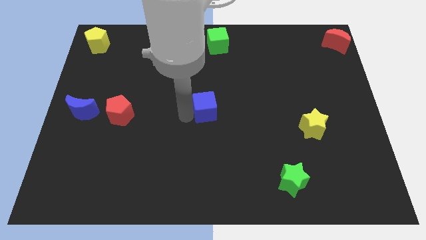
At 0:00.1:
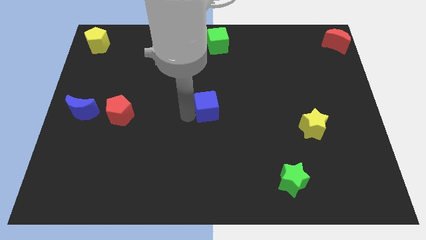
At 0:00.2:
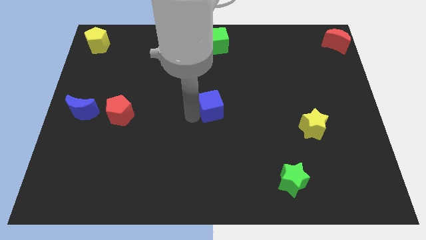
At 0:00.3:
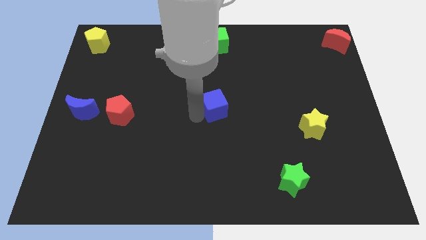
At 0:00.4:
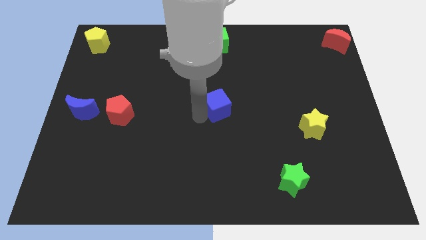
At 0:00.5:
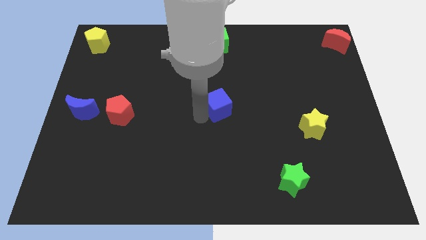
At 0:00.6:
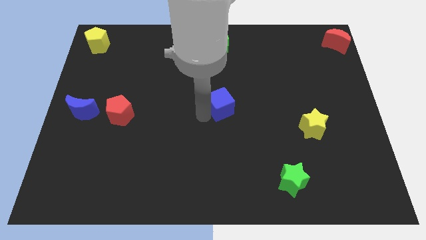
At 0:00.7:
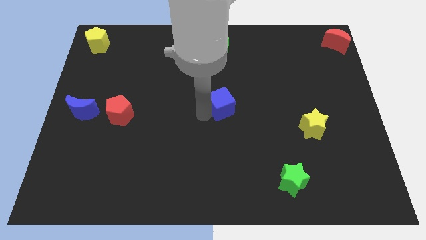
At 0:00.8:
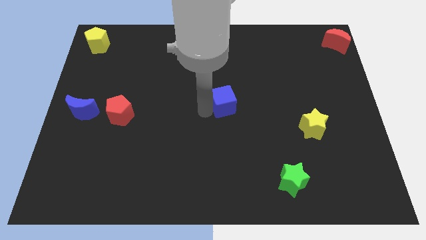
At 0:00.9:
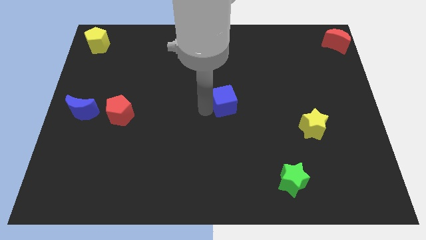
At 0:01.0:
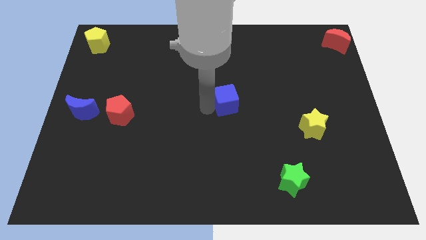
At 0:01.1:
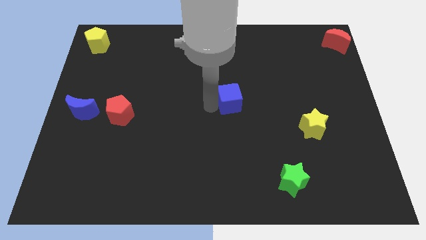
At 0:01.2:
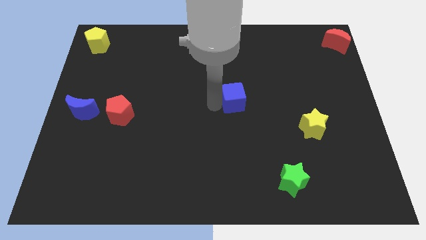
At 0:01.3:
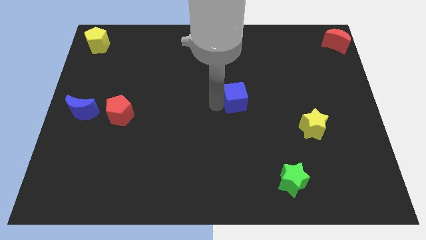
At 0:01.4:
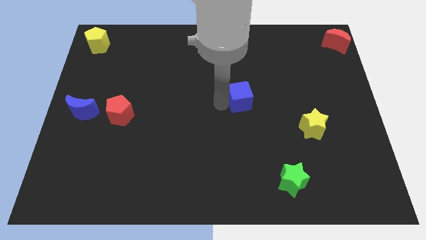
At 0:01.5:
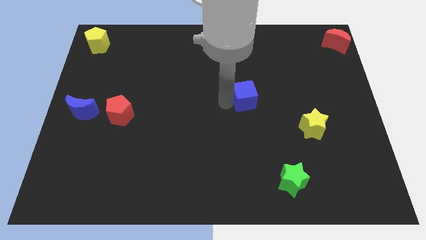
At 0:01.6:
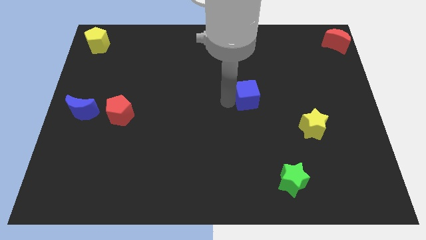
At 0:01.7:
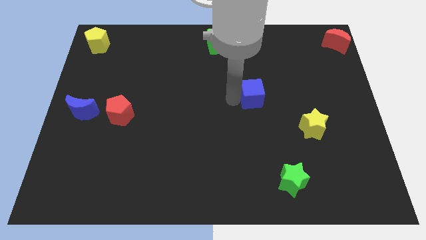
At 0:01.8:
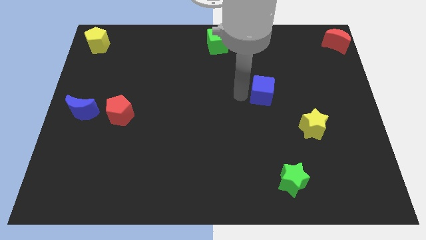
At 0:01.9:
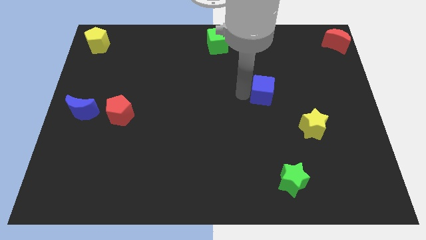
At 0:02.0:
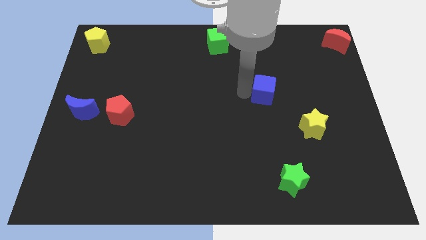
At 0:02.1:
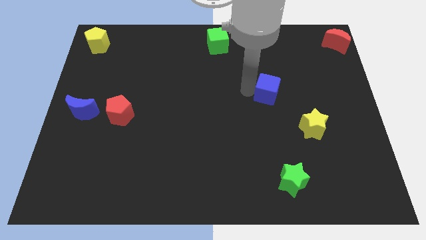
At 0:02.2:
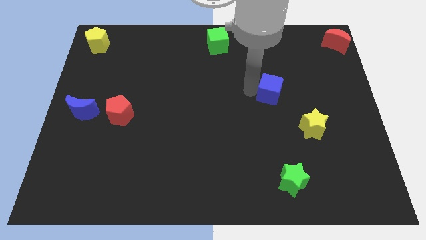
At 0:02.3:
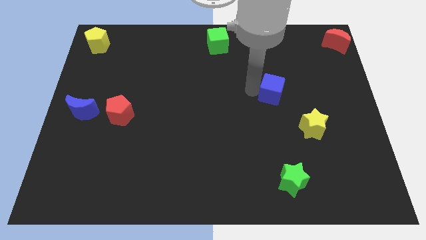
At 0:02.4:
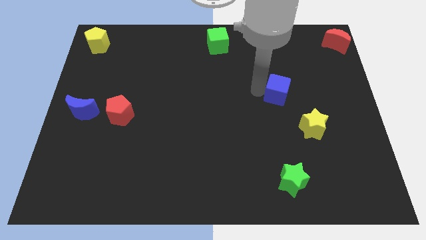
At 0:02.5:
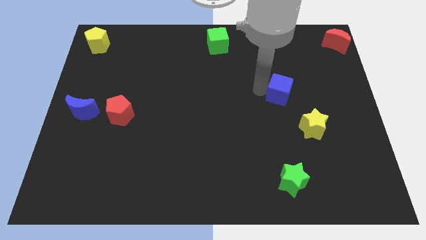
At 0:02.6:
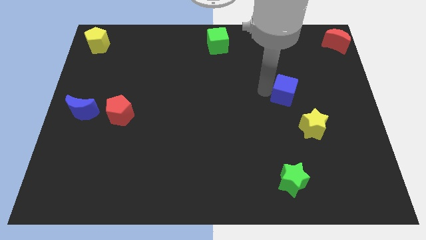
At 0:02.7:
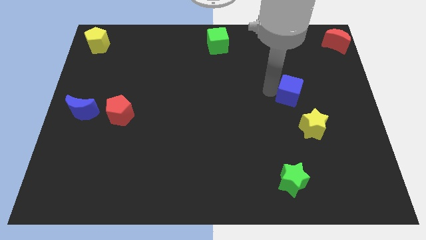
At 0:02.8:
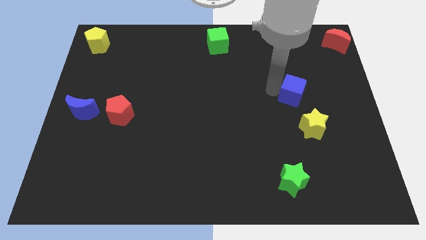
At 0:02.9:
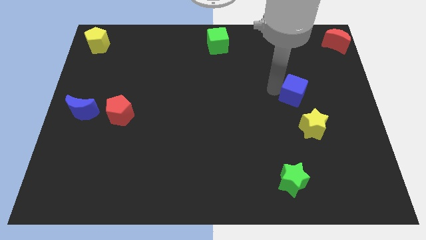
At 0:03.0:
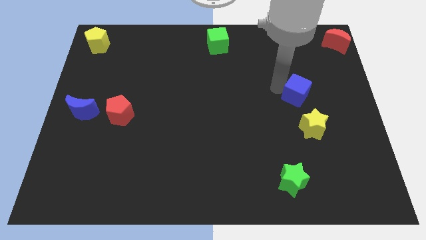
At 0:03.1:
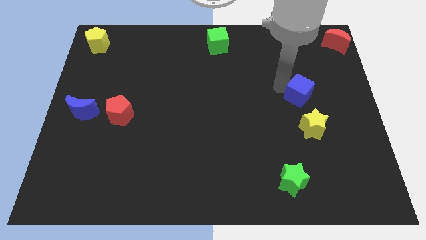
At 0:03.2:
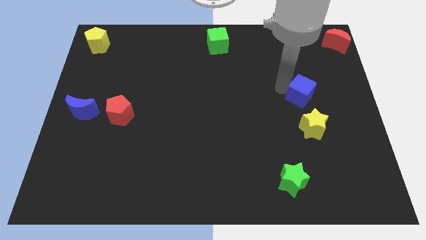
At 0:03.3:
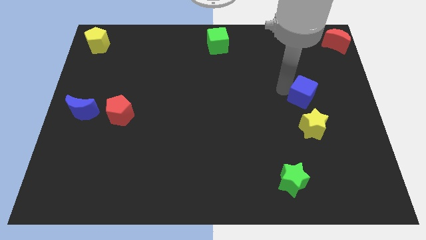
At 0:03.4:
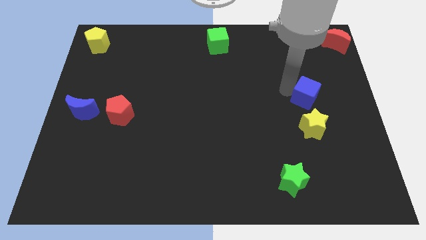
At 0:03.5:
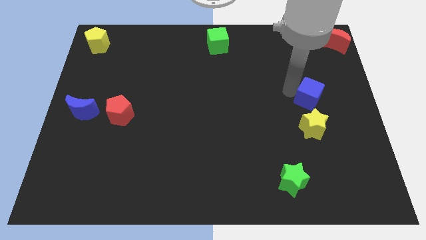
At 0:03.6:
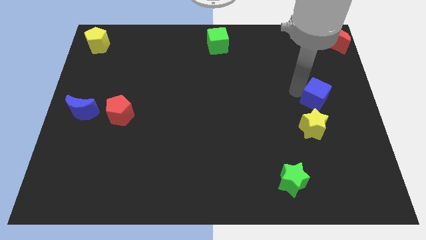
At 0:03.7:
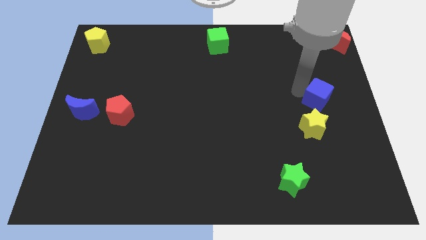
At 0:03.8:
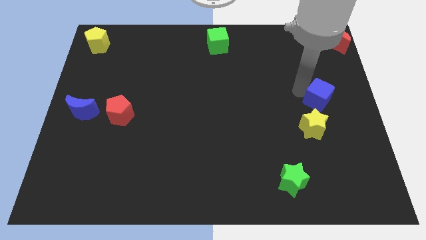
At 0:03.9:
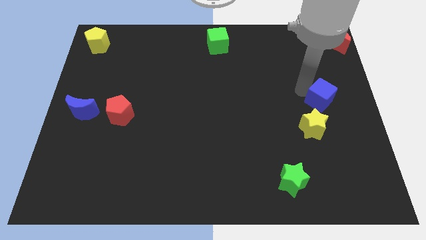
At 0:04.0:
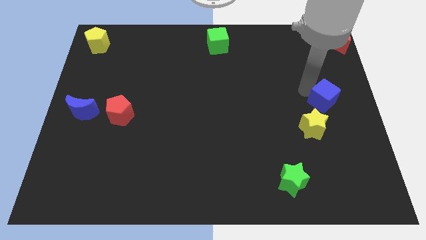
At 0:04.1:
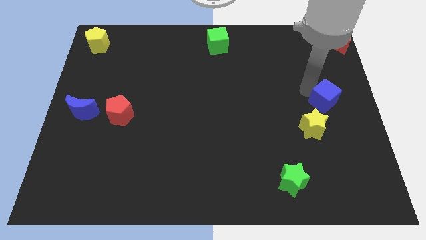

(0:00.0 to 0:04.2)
place the blue cube in between red moon and the yellow star

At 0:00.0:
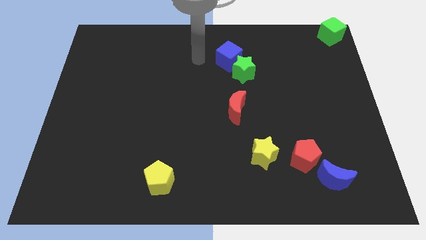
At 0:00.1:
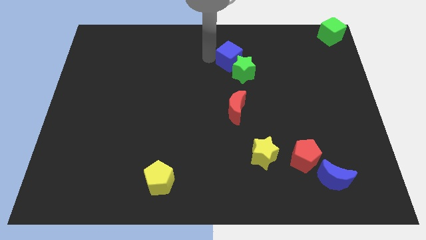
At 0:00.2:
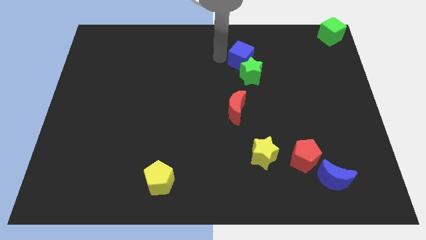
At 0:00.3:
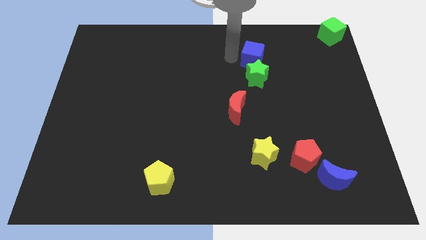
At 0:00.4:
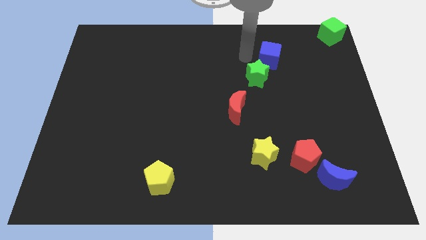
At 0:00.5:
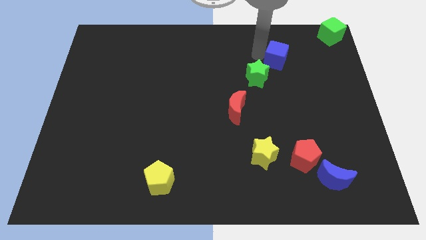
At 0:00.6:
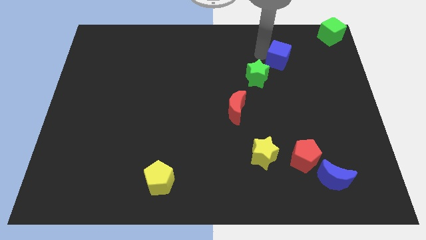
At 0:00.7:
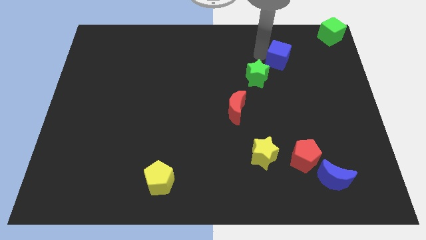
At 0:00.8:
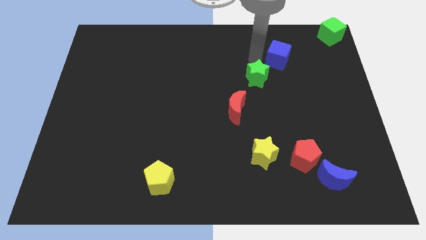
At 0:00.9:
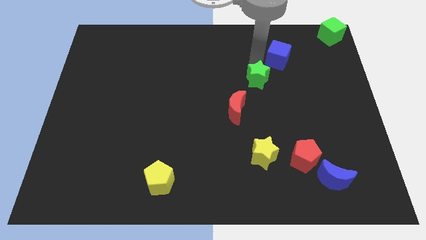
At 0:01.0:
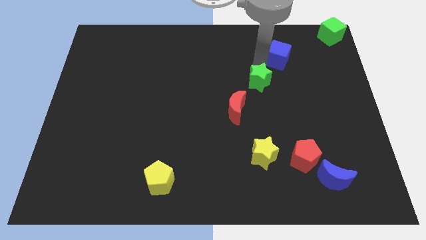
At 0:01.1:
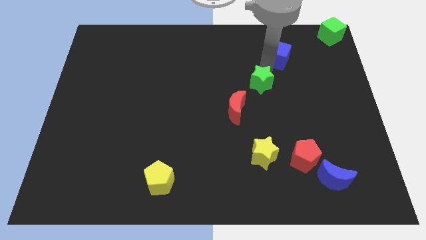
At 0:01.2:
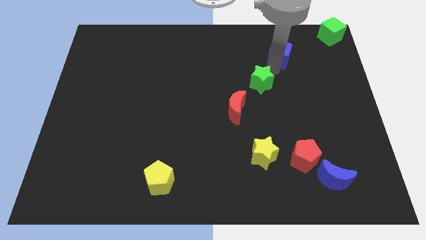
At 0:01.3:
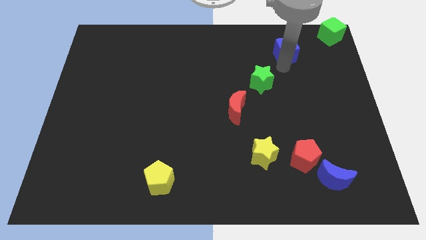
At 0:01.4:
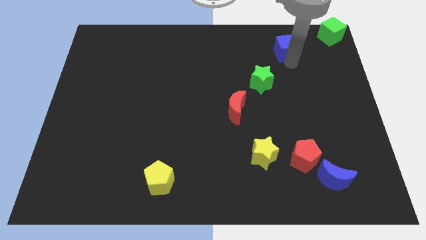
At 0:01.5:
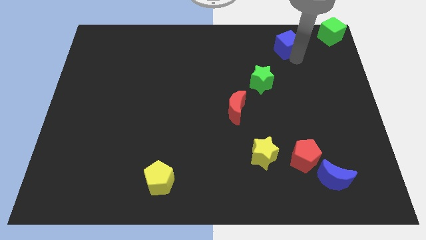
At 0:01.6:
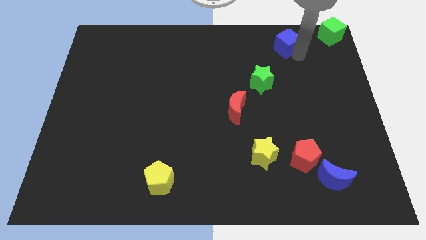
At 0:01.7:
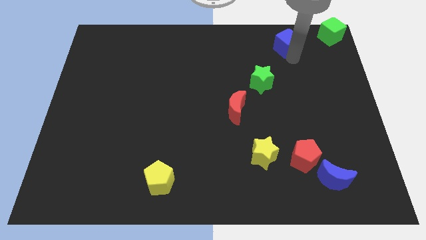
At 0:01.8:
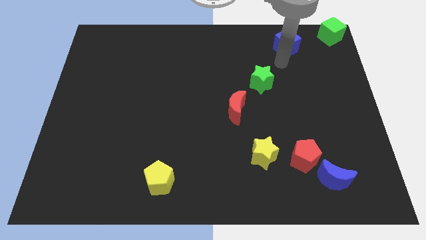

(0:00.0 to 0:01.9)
separate the blue cube from the green star

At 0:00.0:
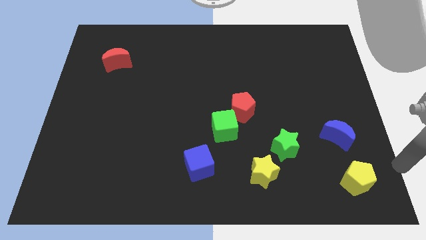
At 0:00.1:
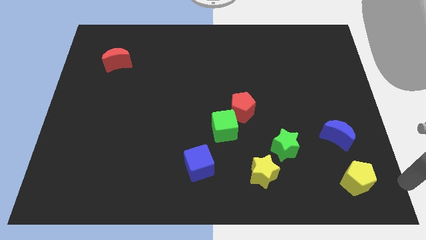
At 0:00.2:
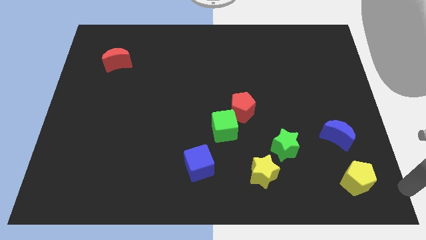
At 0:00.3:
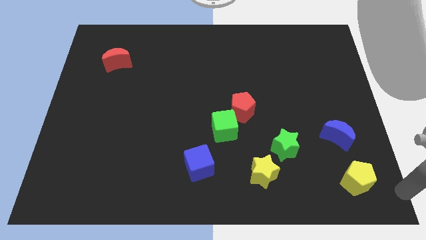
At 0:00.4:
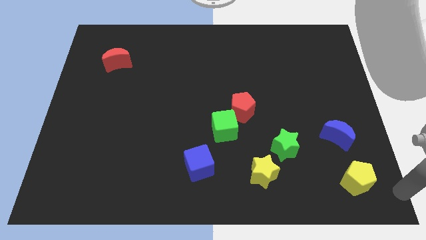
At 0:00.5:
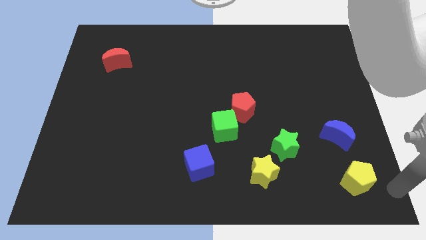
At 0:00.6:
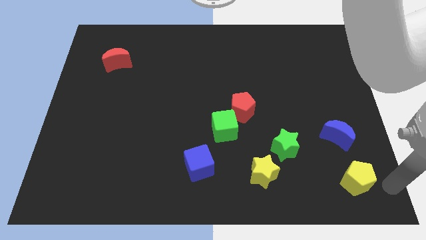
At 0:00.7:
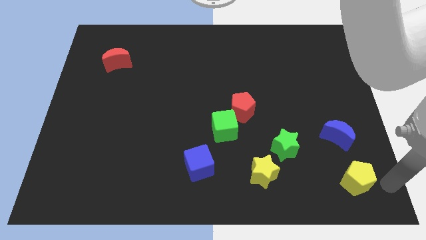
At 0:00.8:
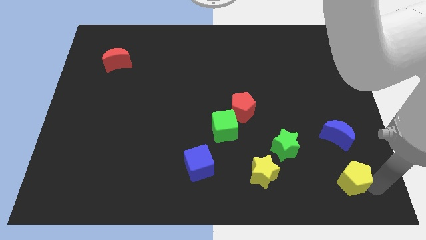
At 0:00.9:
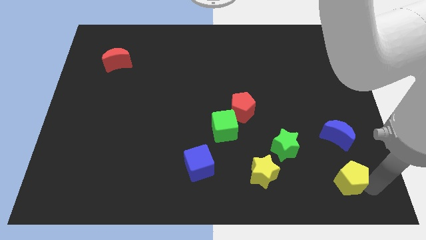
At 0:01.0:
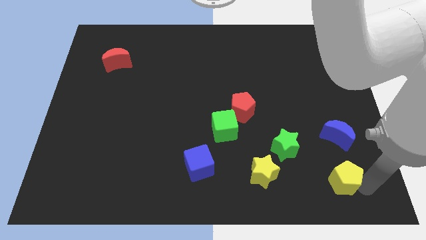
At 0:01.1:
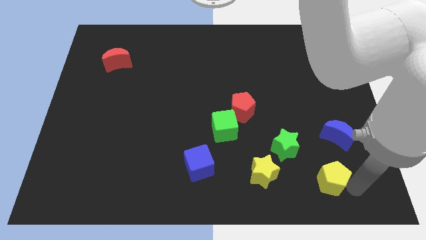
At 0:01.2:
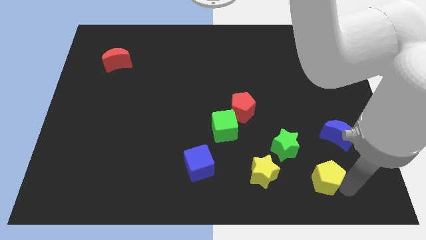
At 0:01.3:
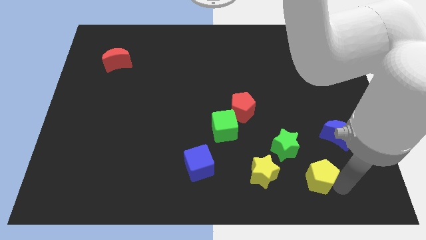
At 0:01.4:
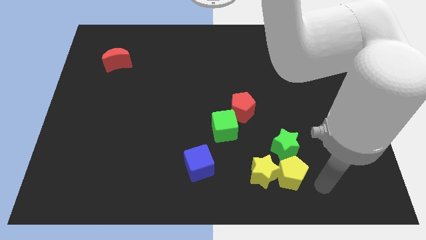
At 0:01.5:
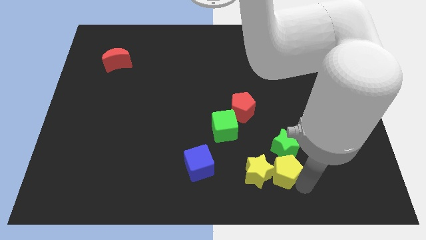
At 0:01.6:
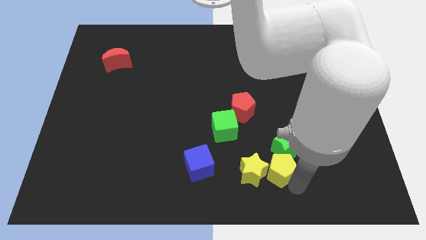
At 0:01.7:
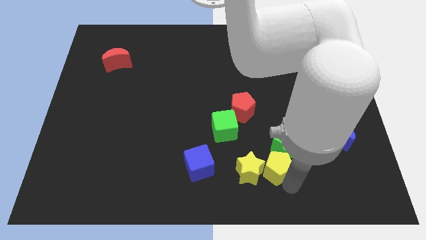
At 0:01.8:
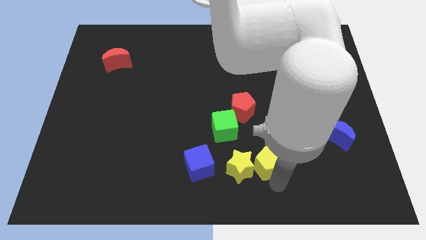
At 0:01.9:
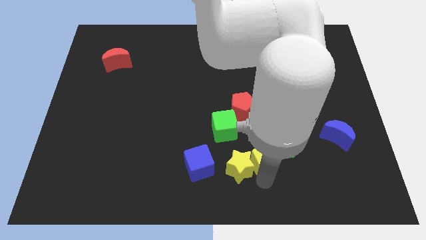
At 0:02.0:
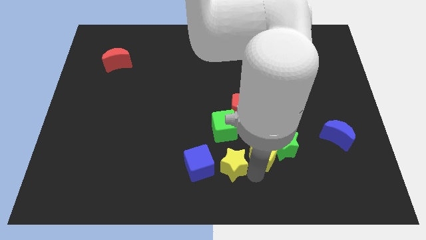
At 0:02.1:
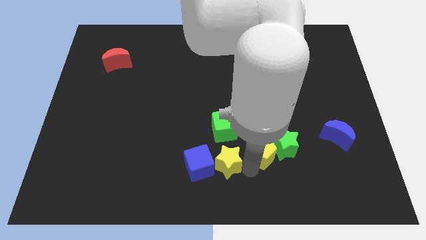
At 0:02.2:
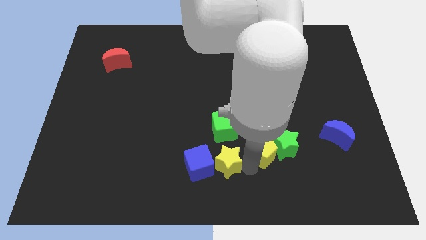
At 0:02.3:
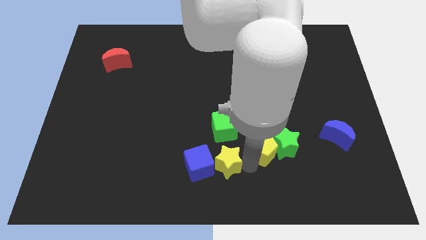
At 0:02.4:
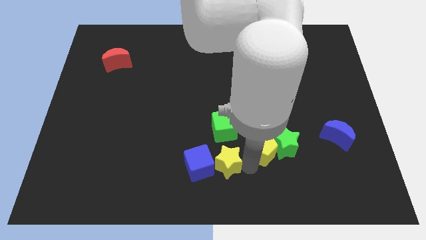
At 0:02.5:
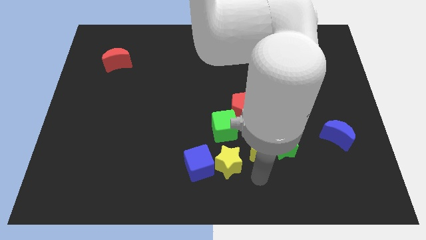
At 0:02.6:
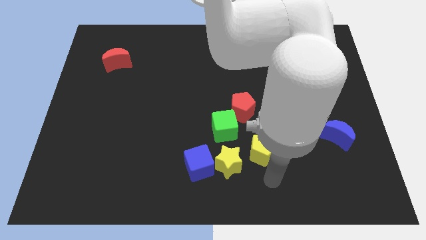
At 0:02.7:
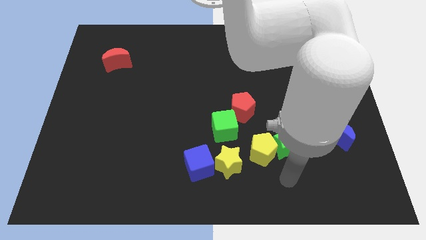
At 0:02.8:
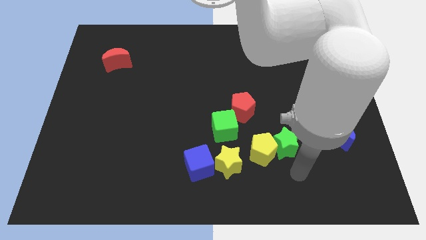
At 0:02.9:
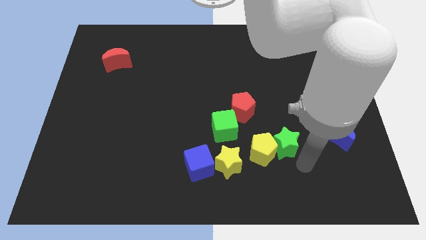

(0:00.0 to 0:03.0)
arrange a group of blocks in a line properly
